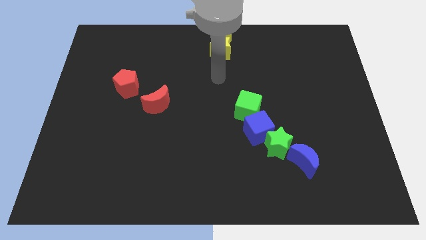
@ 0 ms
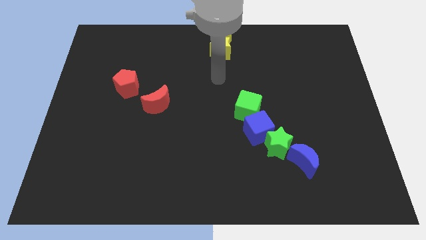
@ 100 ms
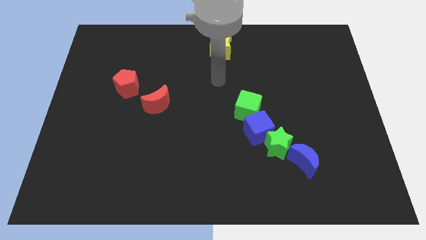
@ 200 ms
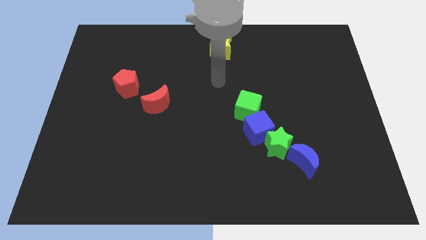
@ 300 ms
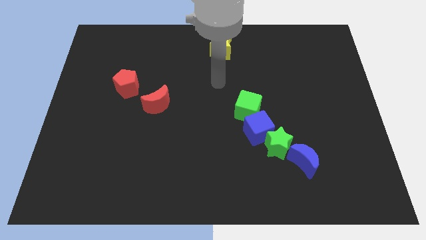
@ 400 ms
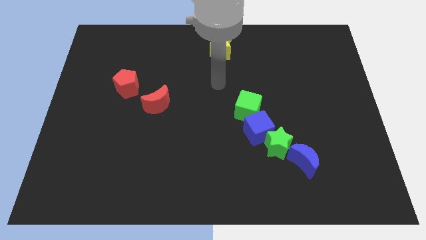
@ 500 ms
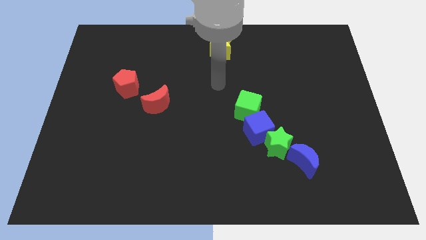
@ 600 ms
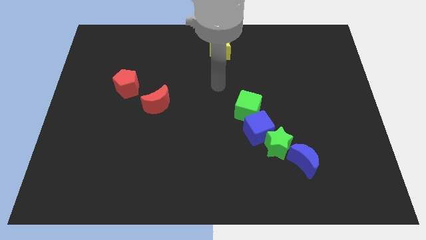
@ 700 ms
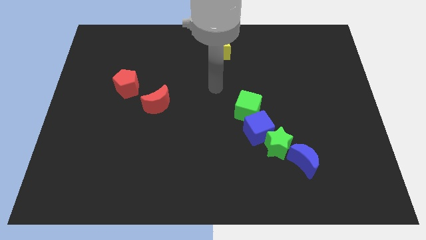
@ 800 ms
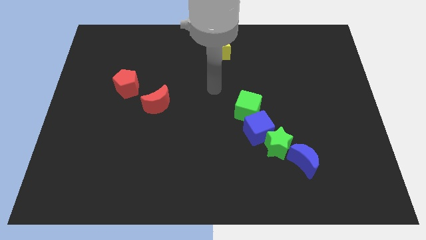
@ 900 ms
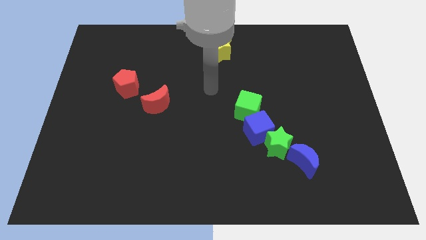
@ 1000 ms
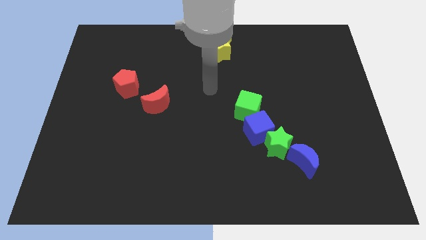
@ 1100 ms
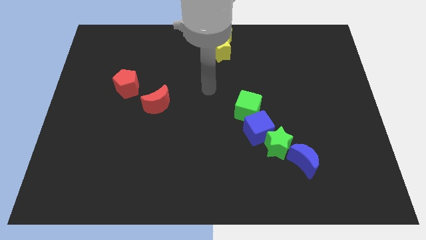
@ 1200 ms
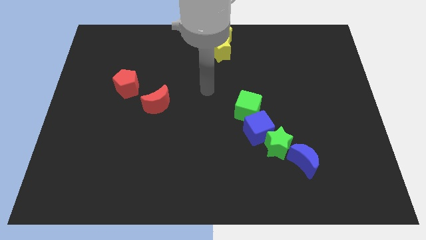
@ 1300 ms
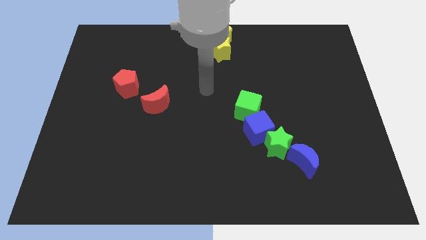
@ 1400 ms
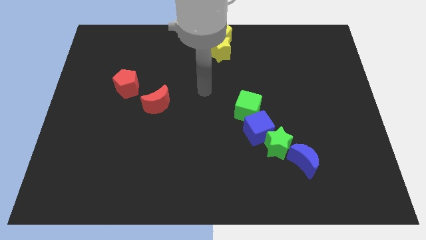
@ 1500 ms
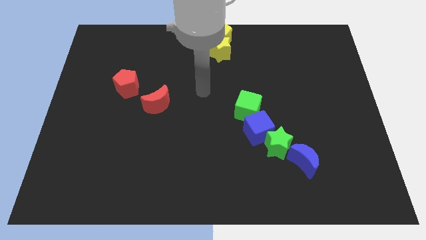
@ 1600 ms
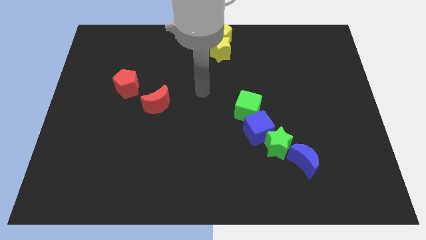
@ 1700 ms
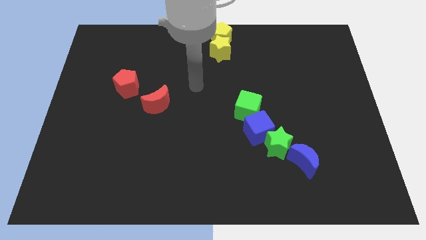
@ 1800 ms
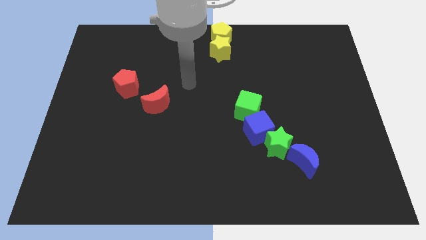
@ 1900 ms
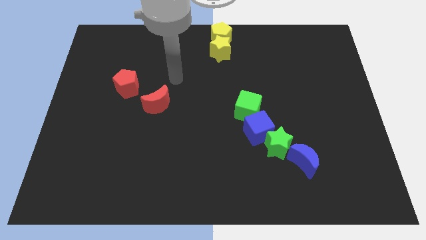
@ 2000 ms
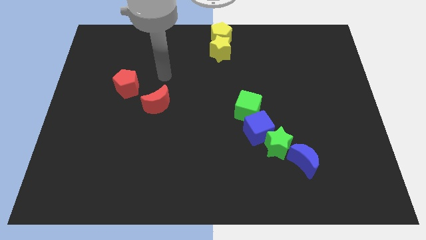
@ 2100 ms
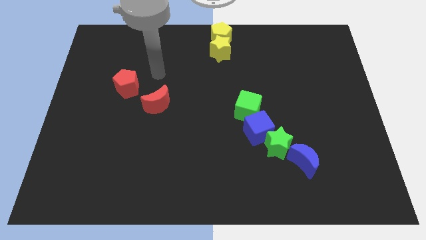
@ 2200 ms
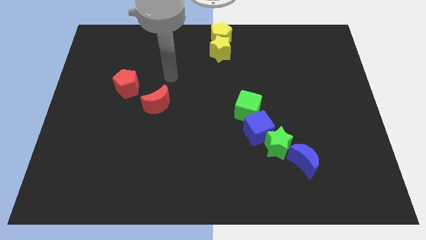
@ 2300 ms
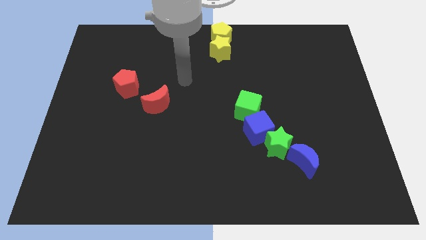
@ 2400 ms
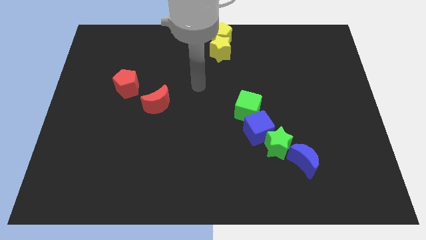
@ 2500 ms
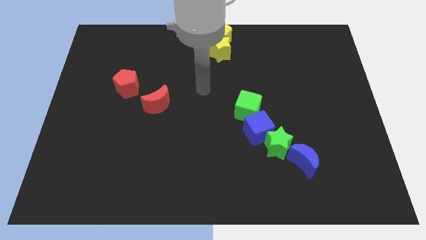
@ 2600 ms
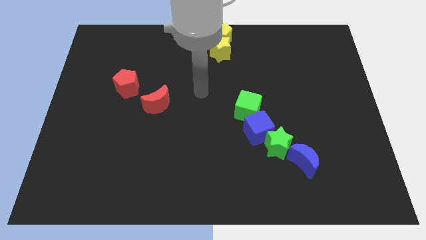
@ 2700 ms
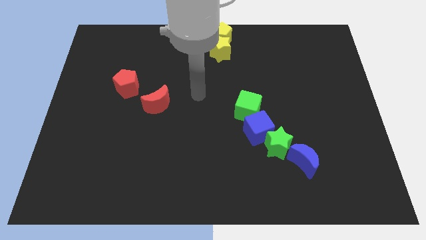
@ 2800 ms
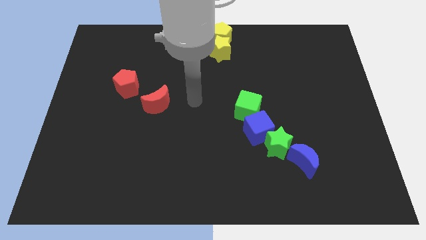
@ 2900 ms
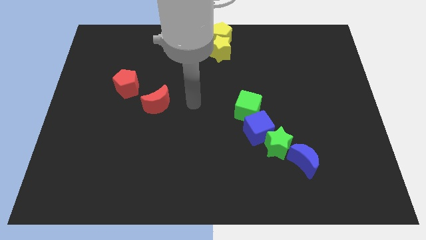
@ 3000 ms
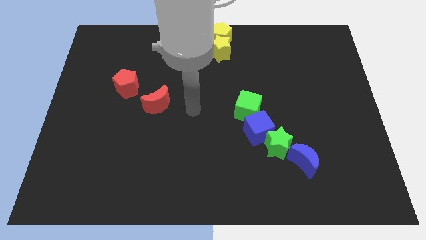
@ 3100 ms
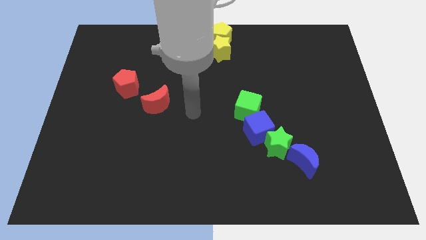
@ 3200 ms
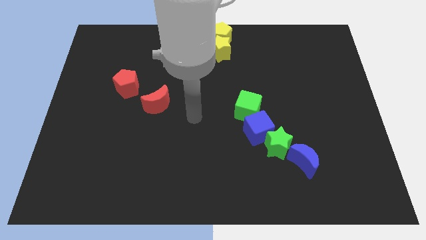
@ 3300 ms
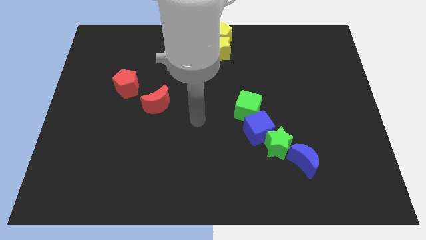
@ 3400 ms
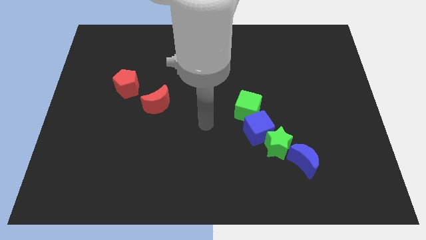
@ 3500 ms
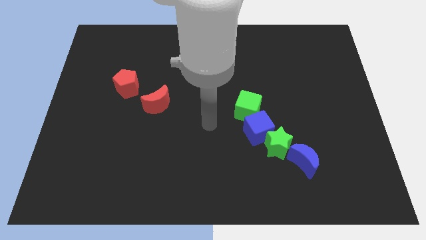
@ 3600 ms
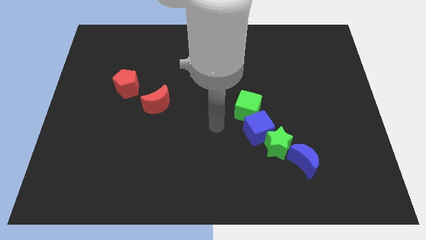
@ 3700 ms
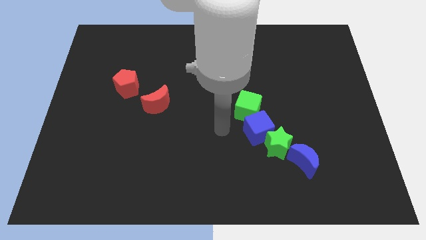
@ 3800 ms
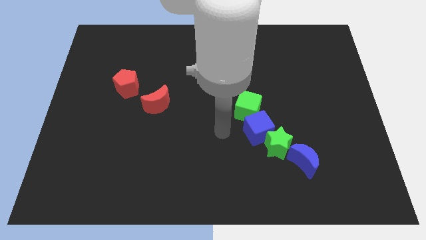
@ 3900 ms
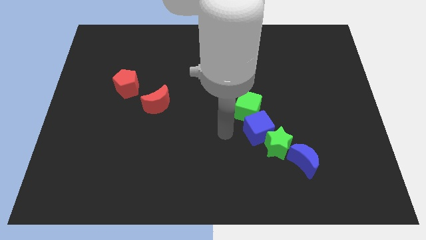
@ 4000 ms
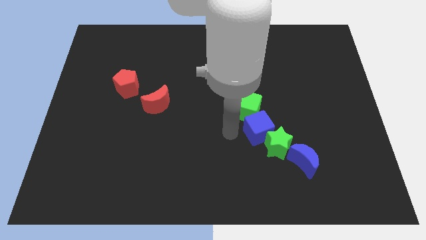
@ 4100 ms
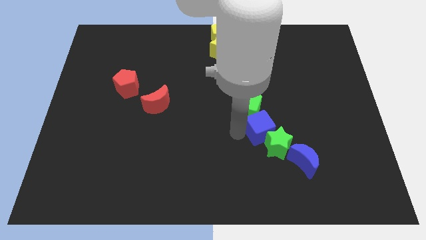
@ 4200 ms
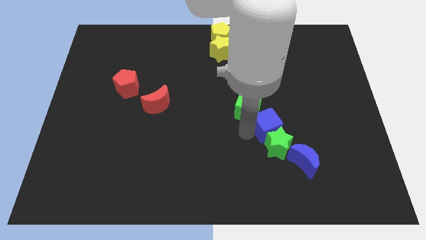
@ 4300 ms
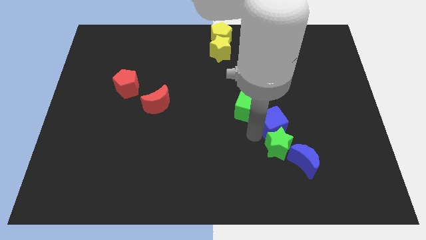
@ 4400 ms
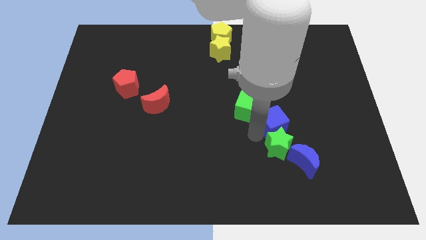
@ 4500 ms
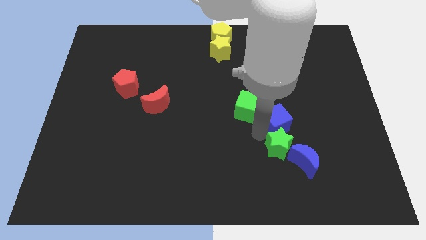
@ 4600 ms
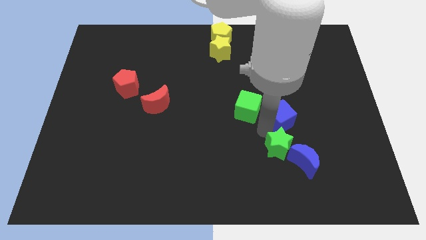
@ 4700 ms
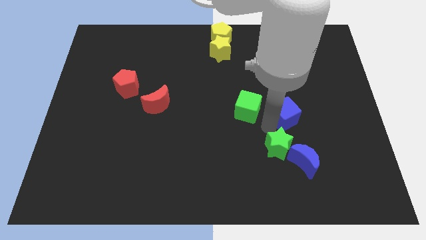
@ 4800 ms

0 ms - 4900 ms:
push the blue cube to the right of the board

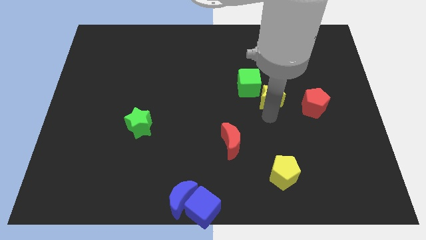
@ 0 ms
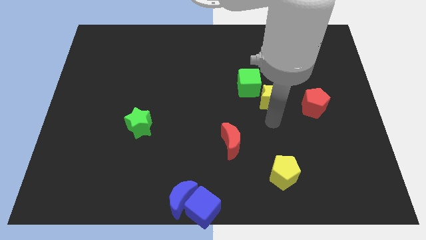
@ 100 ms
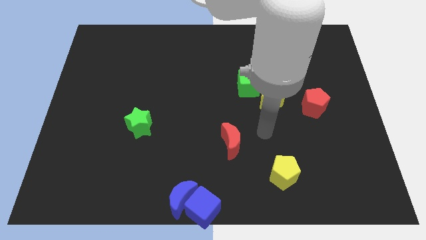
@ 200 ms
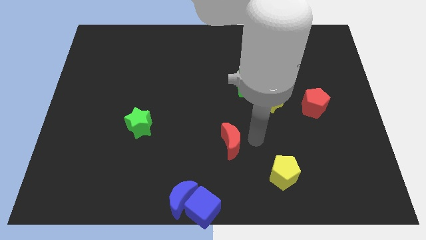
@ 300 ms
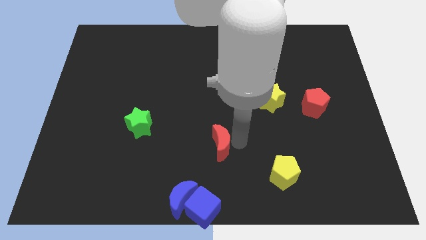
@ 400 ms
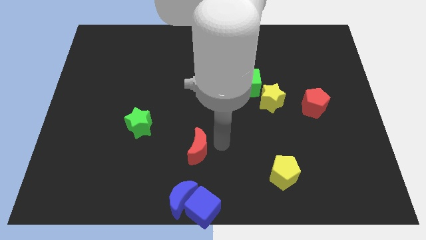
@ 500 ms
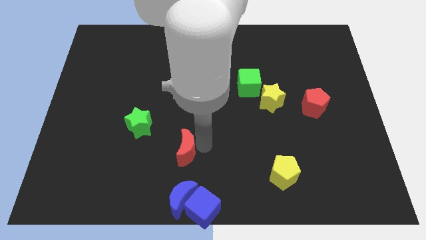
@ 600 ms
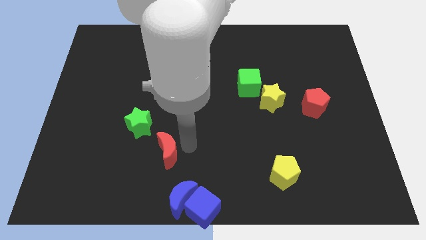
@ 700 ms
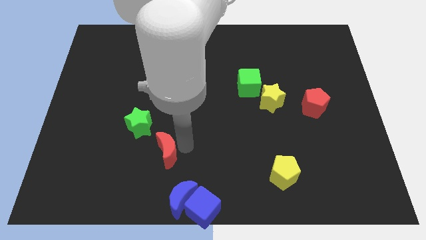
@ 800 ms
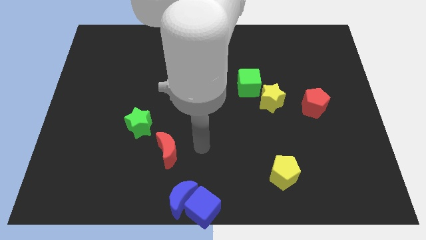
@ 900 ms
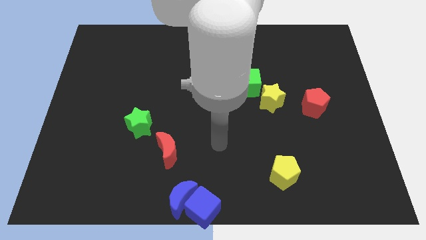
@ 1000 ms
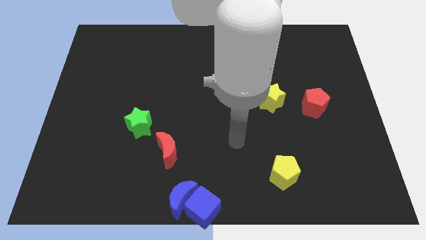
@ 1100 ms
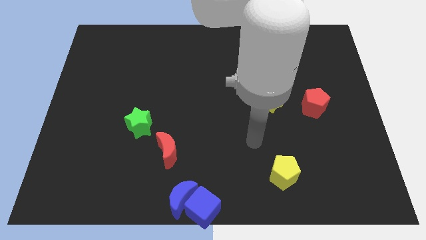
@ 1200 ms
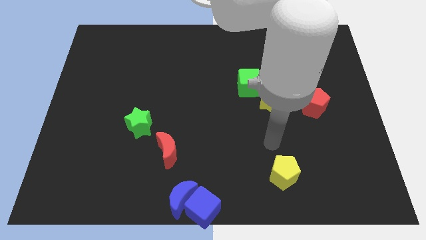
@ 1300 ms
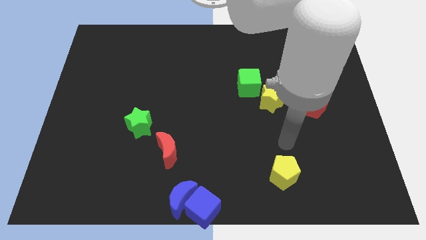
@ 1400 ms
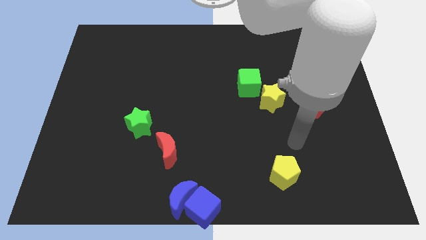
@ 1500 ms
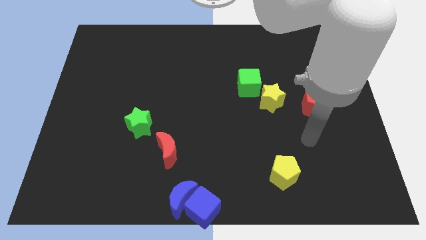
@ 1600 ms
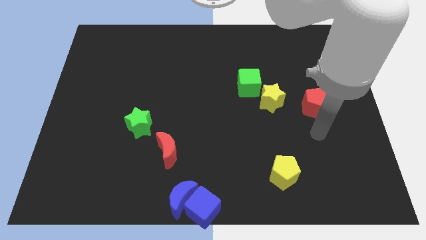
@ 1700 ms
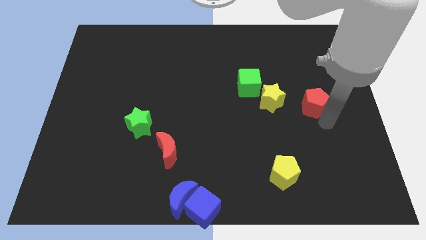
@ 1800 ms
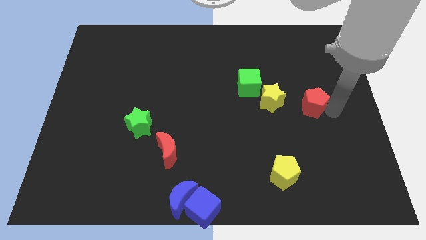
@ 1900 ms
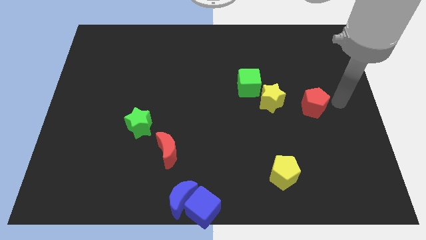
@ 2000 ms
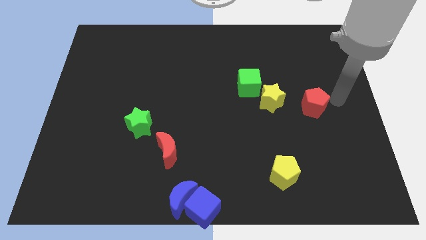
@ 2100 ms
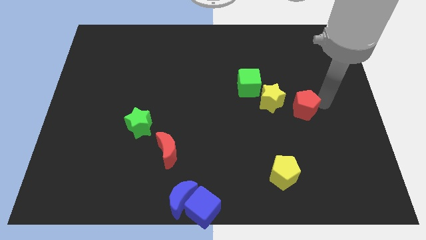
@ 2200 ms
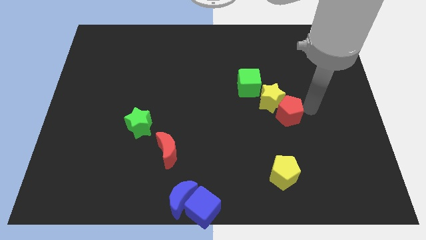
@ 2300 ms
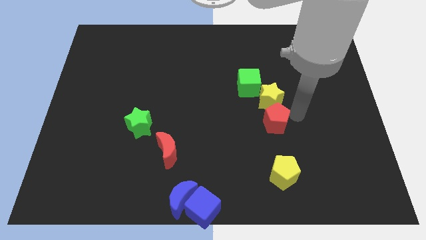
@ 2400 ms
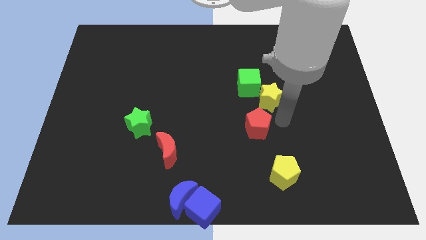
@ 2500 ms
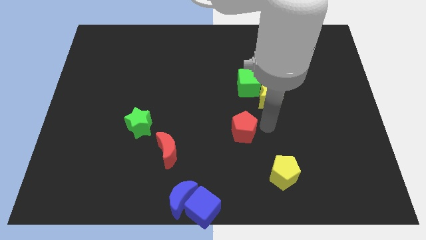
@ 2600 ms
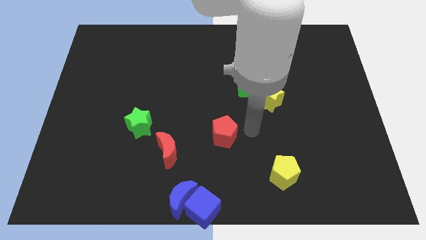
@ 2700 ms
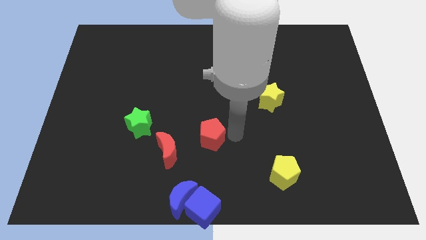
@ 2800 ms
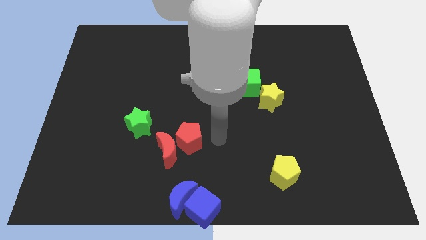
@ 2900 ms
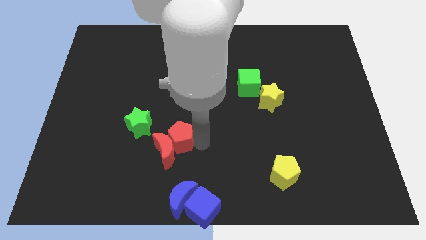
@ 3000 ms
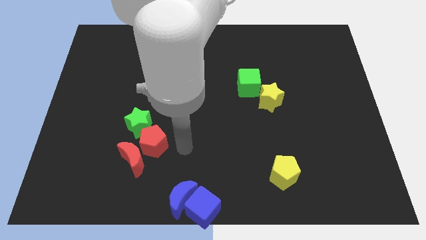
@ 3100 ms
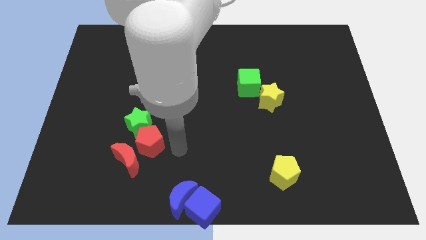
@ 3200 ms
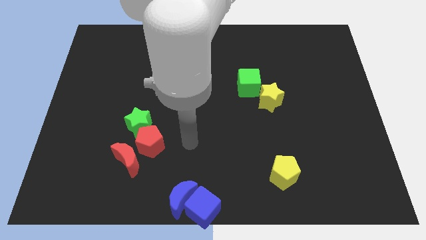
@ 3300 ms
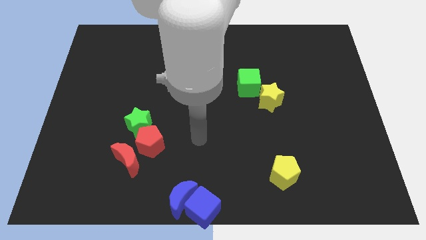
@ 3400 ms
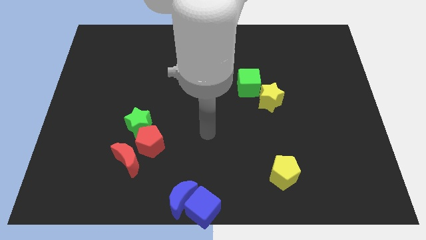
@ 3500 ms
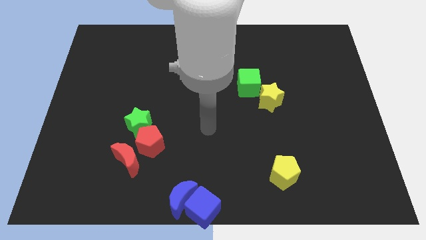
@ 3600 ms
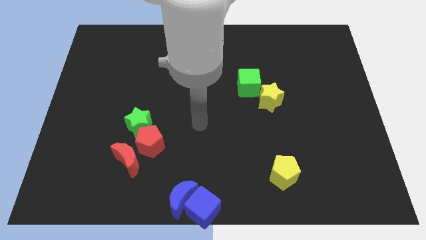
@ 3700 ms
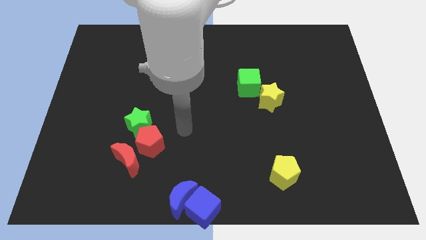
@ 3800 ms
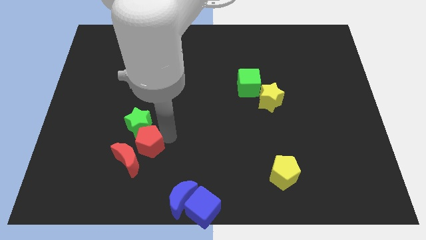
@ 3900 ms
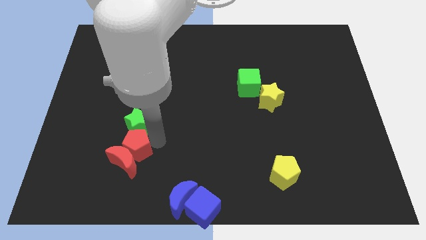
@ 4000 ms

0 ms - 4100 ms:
place the red crescent towards the bottom right side of the green star
